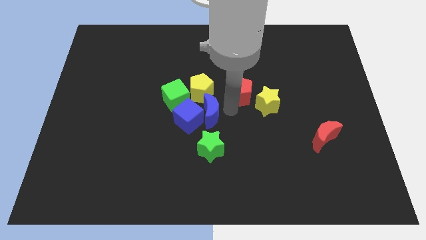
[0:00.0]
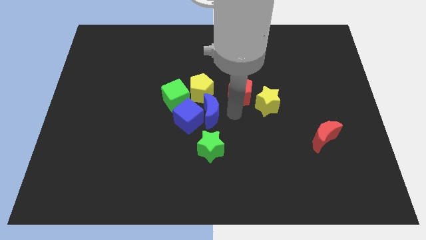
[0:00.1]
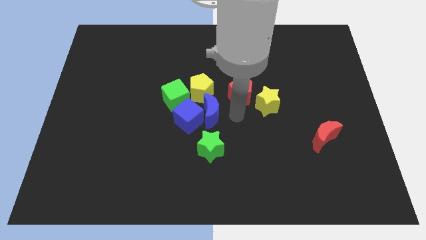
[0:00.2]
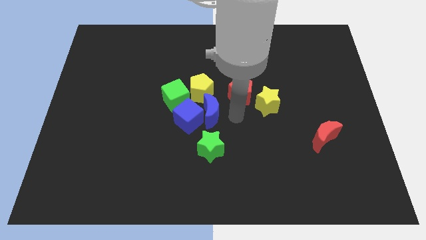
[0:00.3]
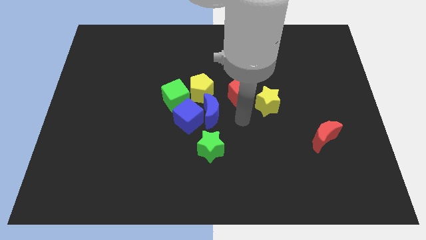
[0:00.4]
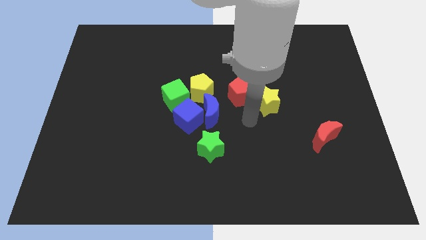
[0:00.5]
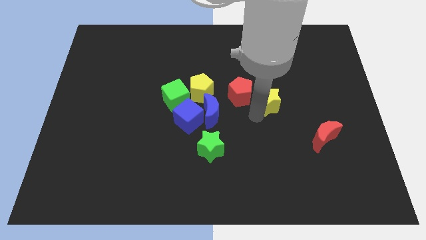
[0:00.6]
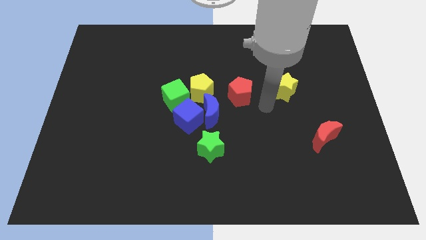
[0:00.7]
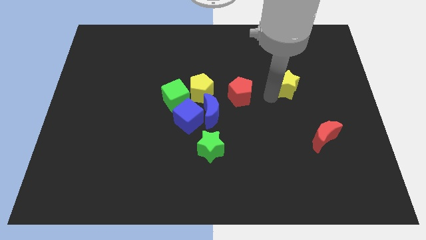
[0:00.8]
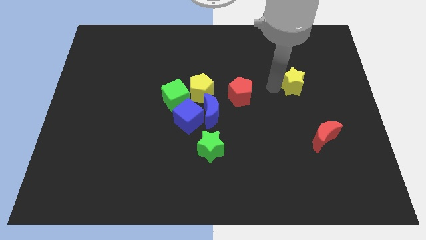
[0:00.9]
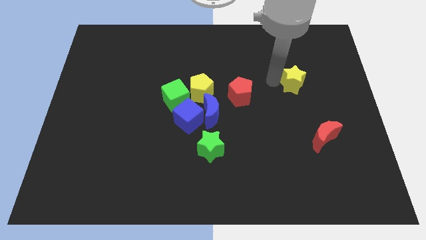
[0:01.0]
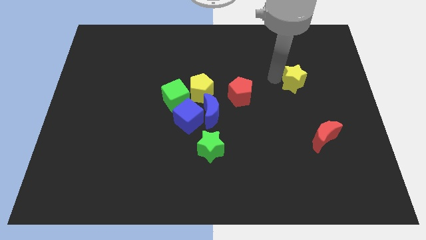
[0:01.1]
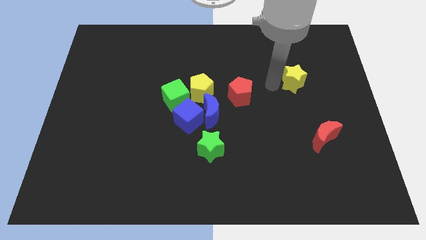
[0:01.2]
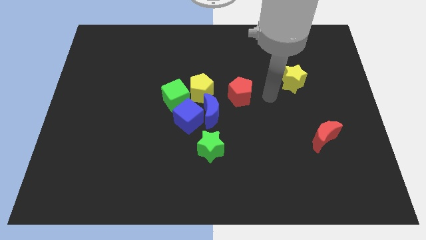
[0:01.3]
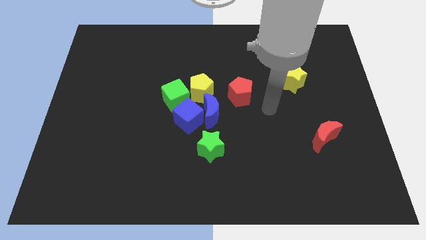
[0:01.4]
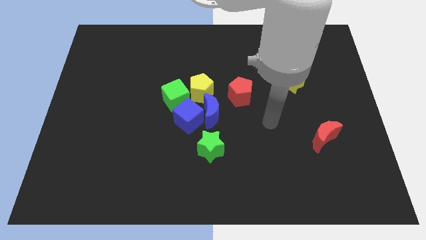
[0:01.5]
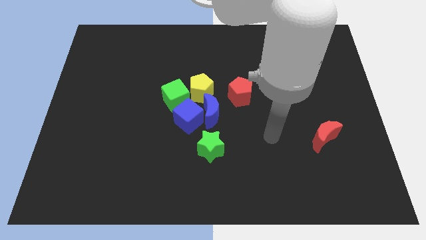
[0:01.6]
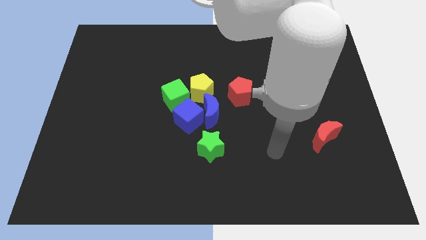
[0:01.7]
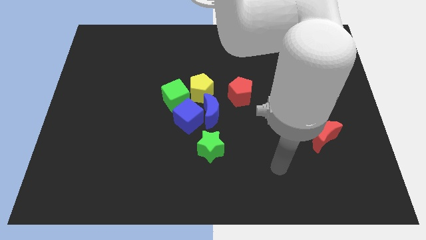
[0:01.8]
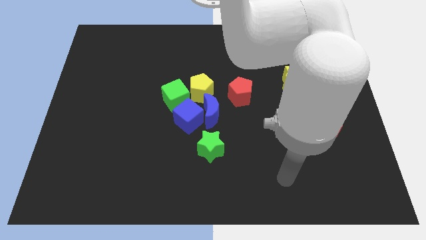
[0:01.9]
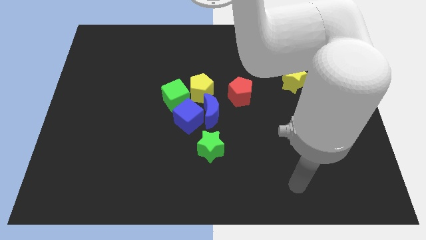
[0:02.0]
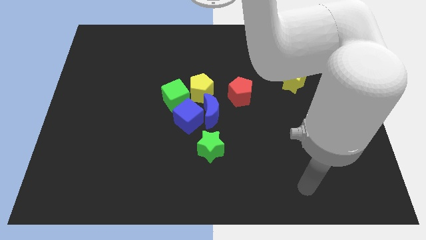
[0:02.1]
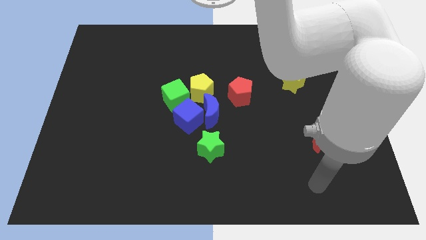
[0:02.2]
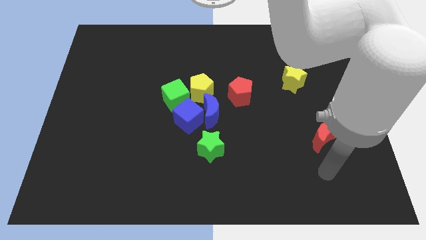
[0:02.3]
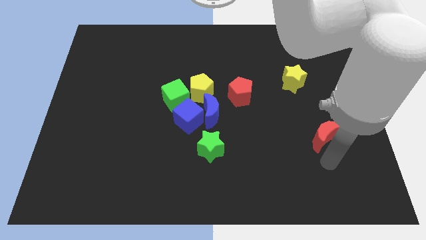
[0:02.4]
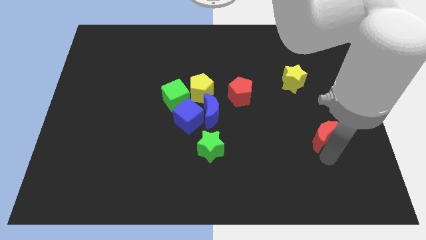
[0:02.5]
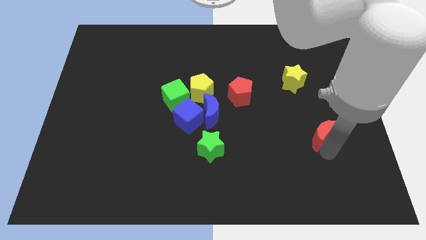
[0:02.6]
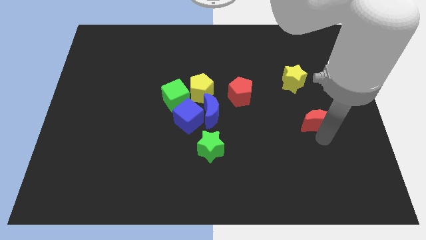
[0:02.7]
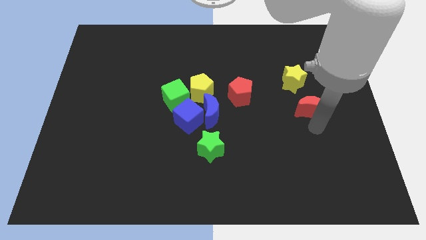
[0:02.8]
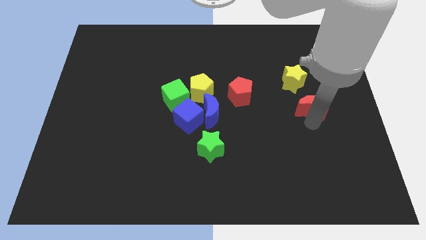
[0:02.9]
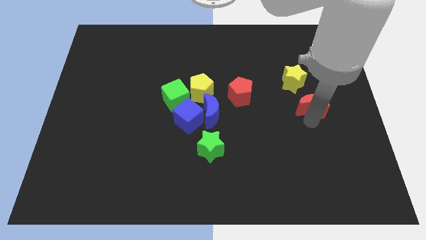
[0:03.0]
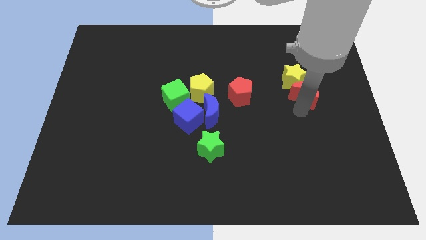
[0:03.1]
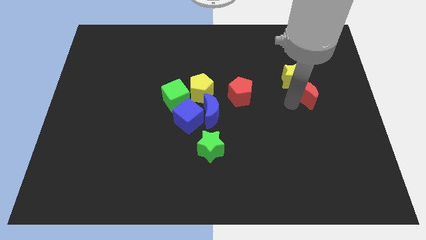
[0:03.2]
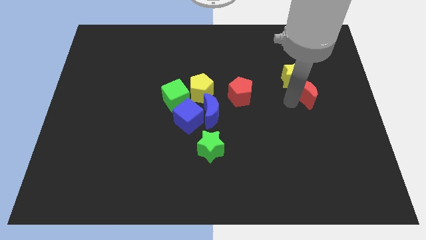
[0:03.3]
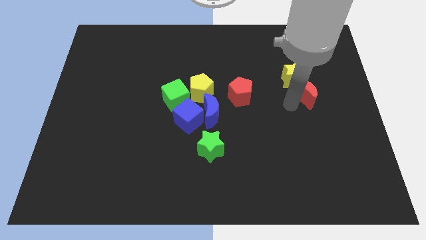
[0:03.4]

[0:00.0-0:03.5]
push the yellow star and the red crescent to the right of the red pentagon

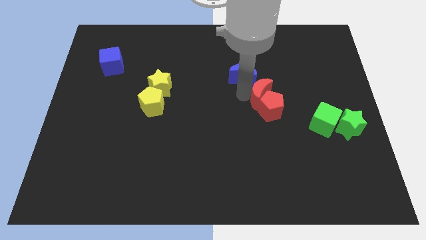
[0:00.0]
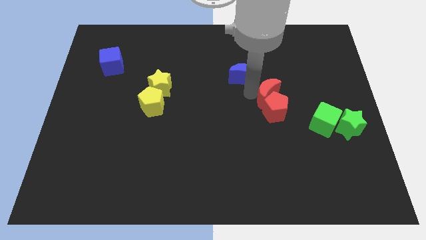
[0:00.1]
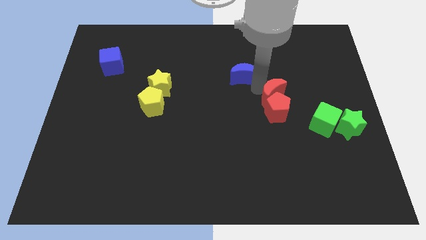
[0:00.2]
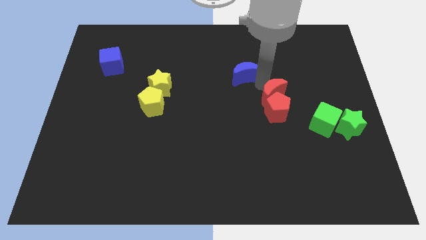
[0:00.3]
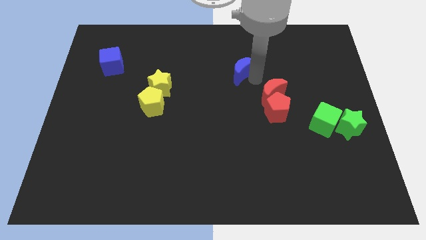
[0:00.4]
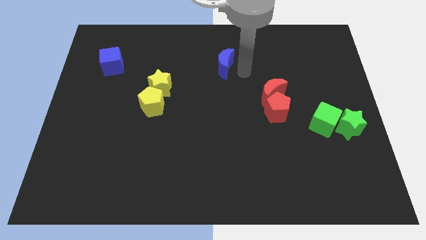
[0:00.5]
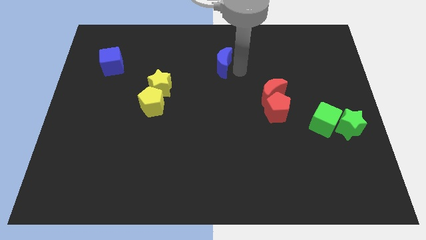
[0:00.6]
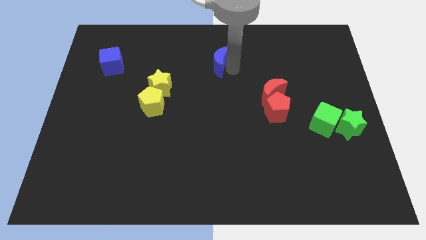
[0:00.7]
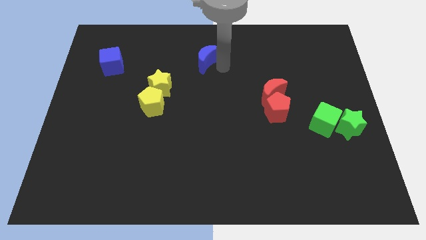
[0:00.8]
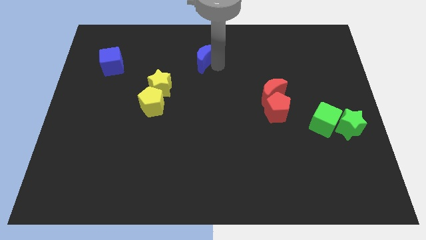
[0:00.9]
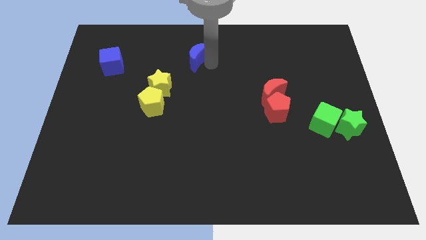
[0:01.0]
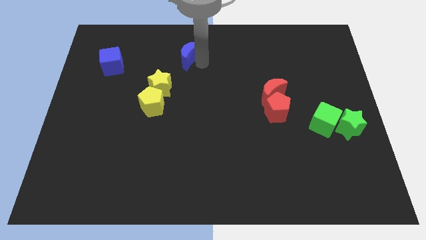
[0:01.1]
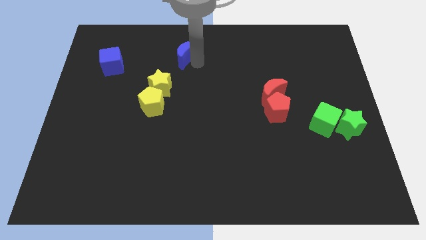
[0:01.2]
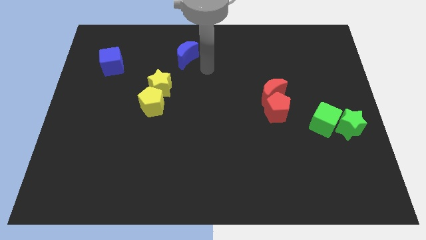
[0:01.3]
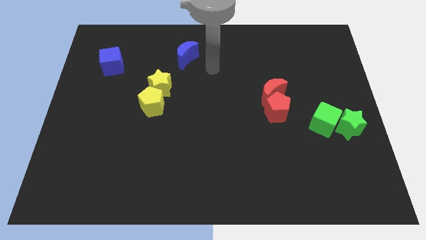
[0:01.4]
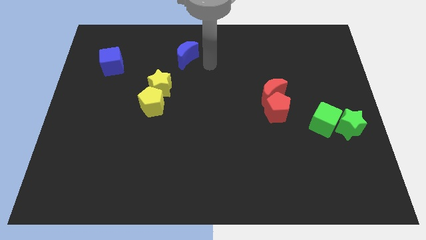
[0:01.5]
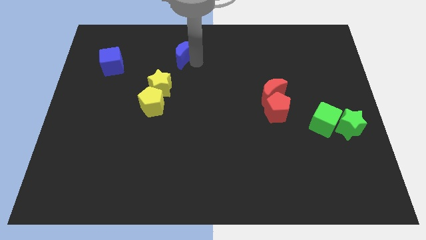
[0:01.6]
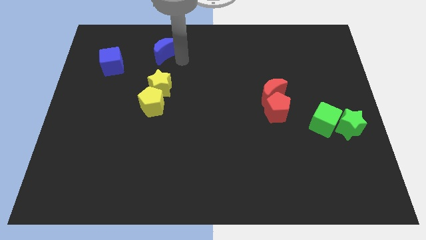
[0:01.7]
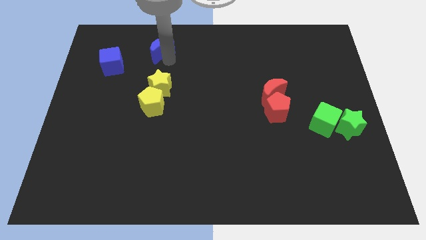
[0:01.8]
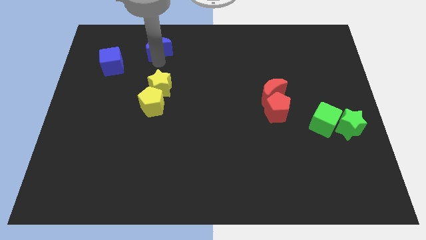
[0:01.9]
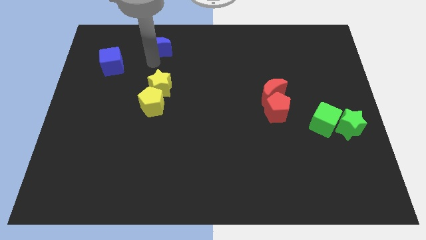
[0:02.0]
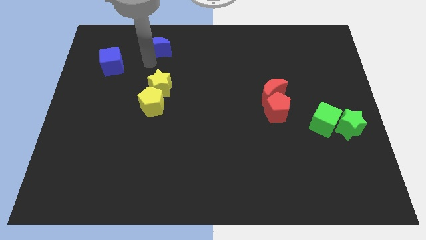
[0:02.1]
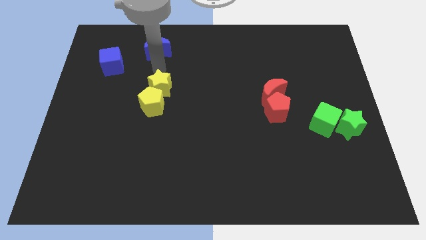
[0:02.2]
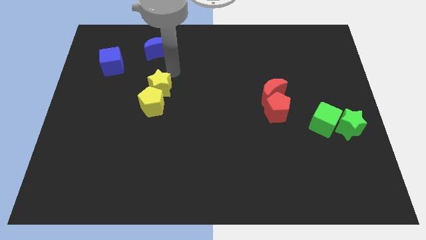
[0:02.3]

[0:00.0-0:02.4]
move blue moon away from red moon

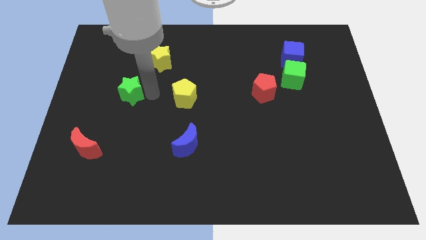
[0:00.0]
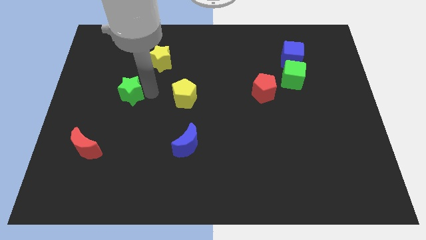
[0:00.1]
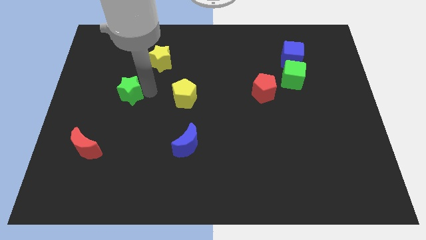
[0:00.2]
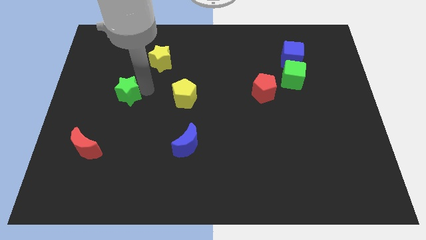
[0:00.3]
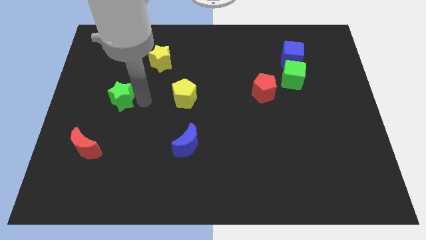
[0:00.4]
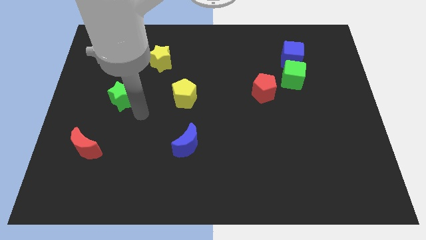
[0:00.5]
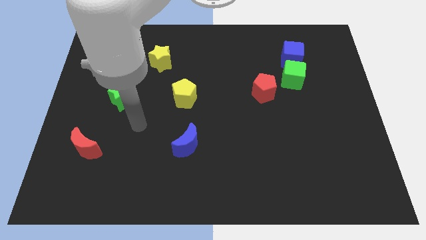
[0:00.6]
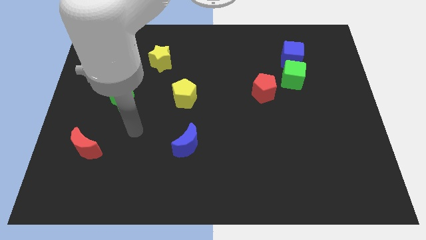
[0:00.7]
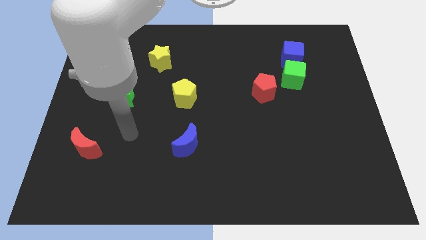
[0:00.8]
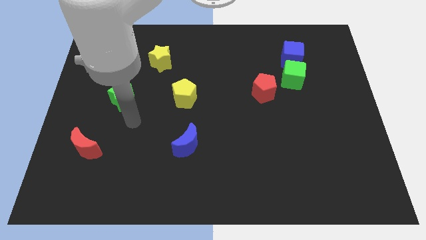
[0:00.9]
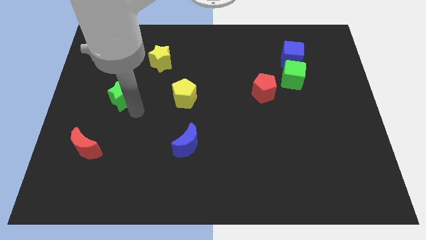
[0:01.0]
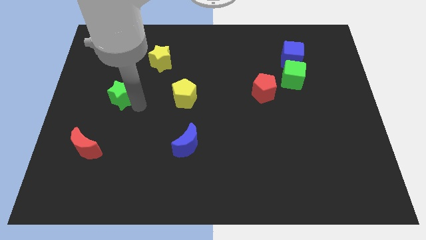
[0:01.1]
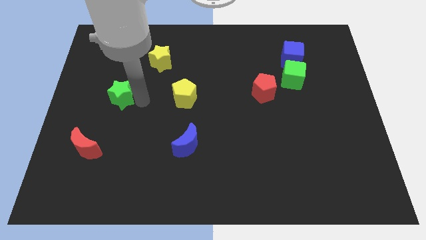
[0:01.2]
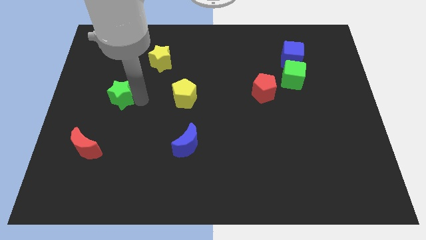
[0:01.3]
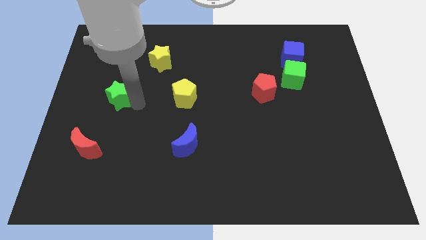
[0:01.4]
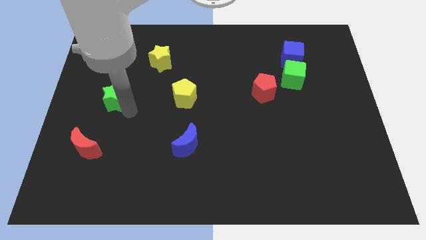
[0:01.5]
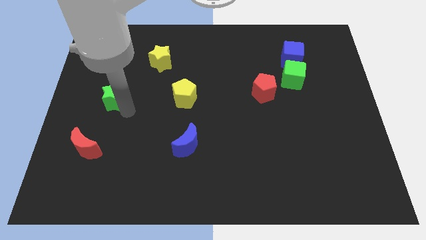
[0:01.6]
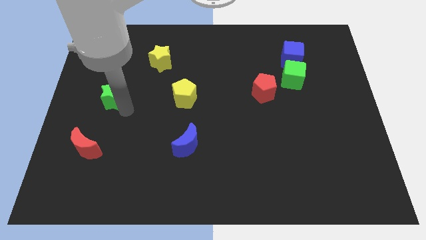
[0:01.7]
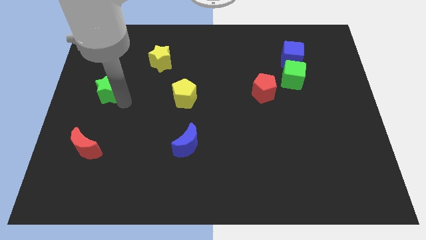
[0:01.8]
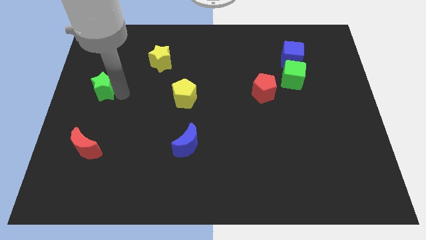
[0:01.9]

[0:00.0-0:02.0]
move the green star to the center left

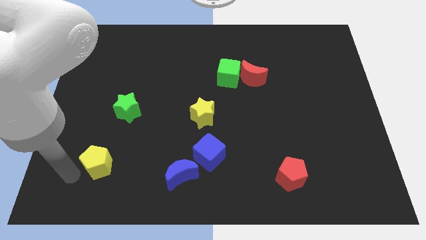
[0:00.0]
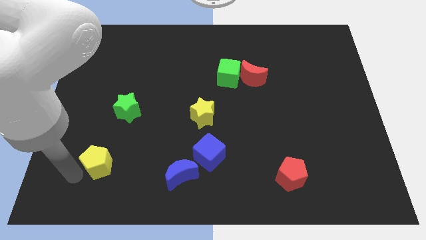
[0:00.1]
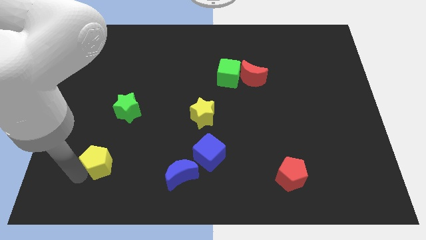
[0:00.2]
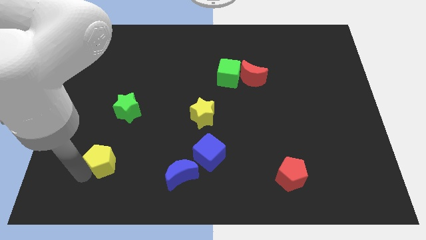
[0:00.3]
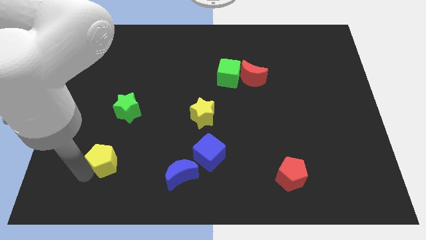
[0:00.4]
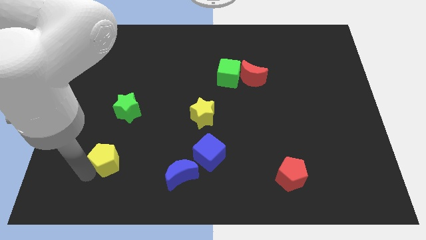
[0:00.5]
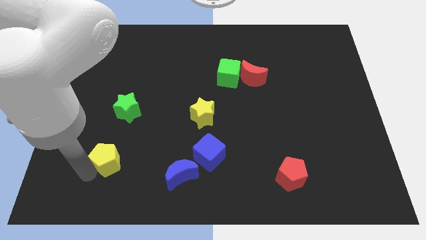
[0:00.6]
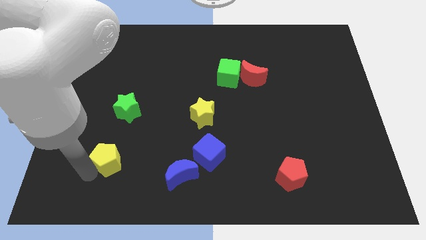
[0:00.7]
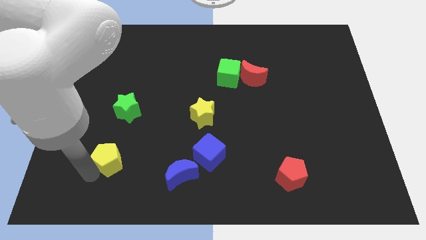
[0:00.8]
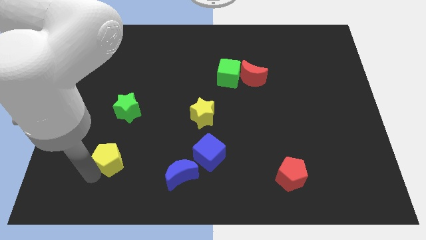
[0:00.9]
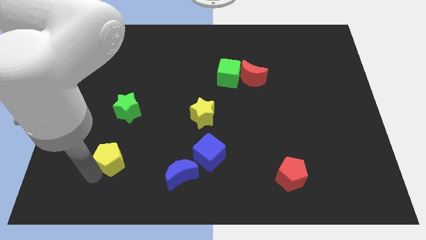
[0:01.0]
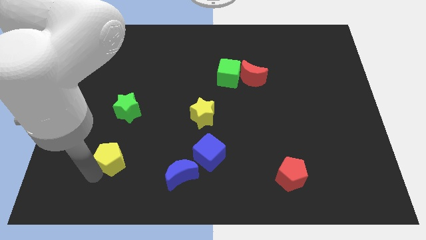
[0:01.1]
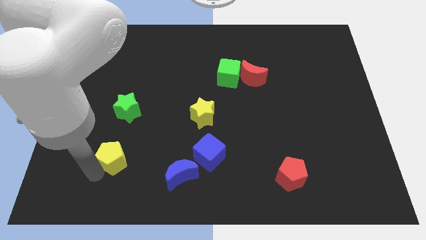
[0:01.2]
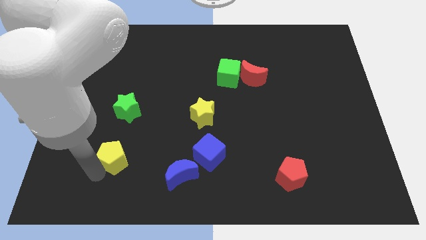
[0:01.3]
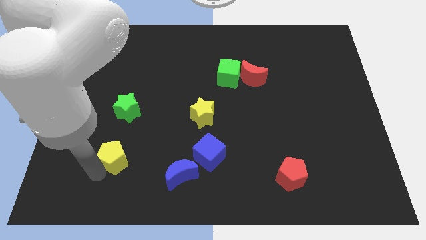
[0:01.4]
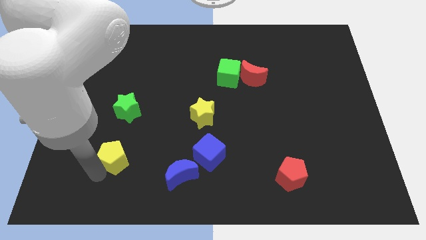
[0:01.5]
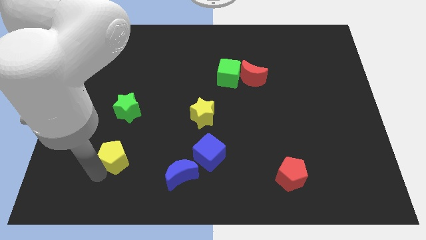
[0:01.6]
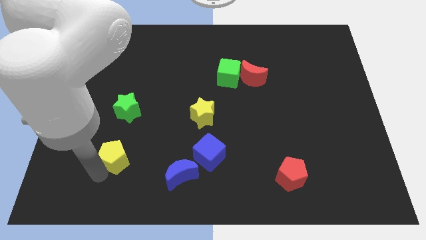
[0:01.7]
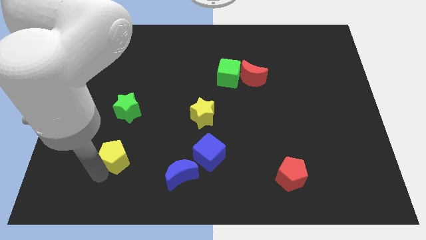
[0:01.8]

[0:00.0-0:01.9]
slightly push the yellow pentagon towards the yellow star
